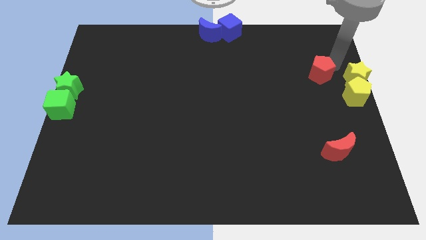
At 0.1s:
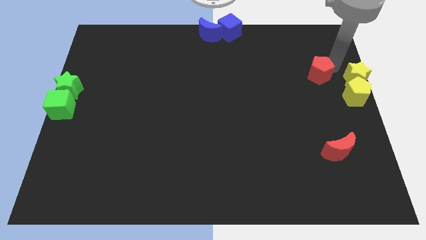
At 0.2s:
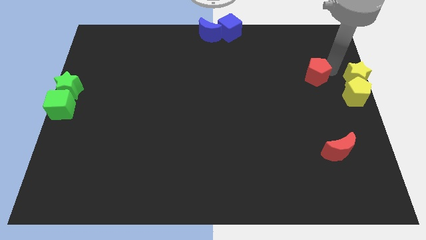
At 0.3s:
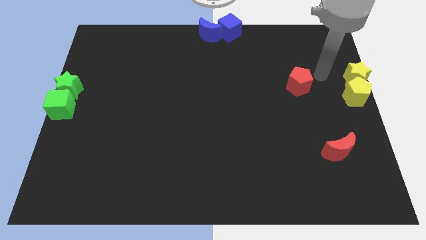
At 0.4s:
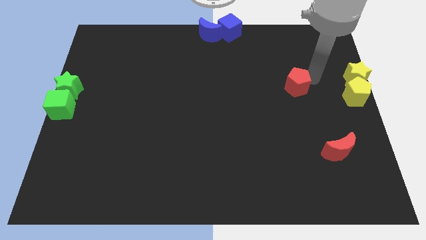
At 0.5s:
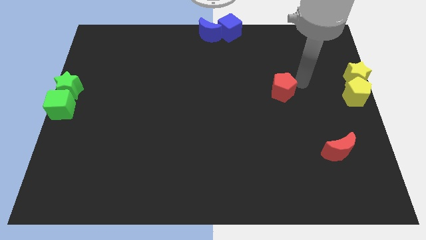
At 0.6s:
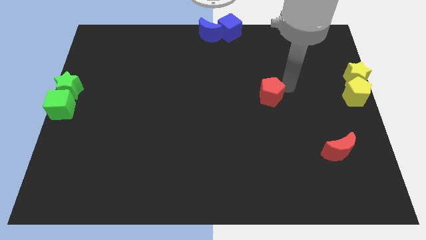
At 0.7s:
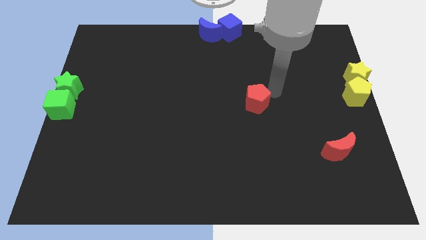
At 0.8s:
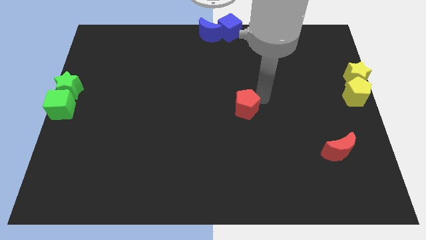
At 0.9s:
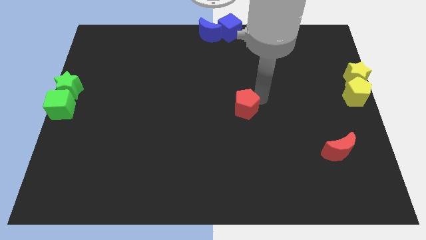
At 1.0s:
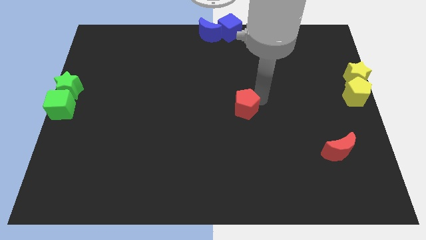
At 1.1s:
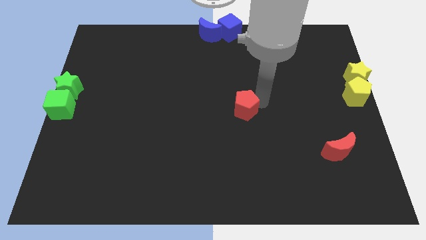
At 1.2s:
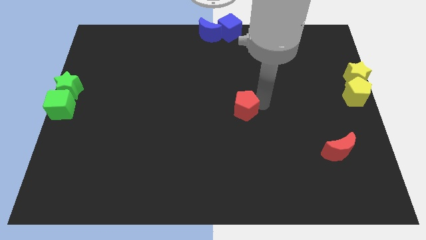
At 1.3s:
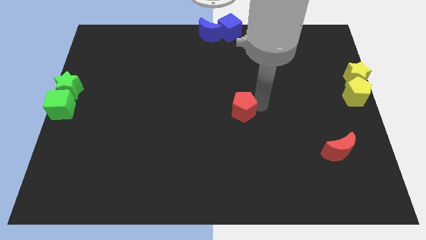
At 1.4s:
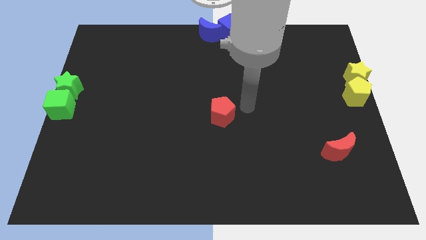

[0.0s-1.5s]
move the red pentagon to the middle of the board

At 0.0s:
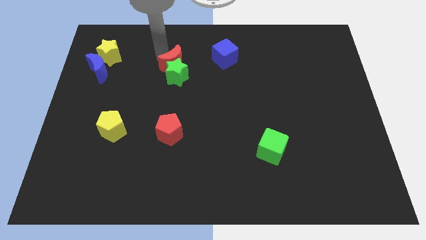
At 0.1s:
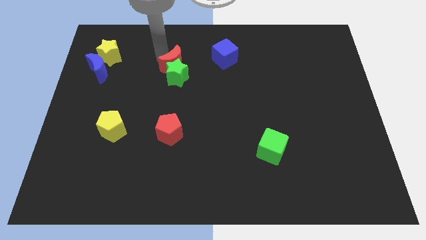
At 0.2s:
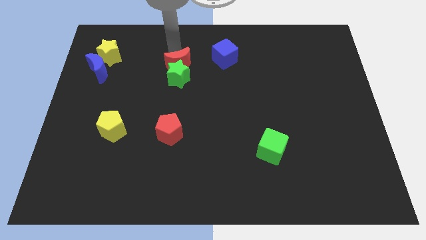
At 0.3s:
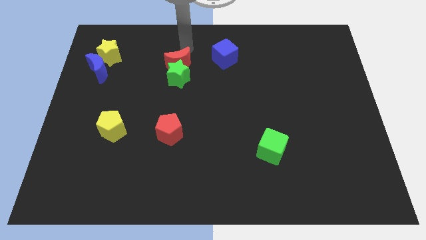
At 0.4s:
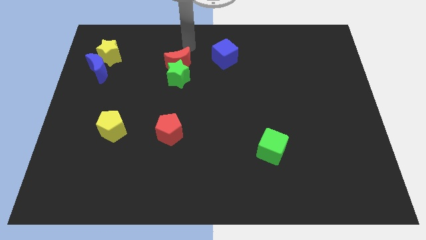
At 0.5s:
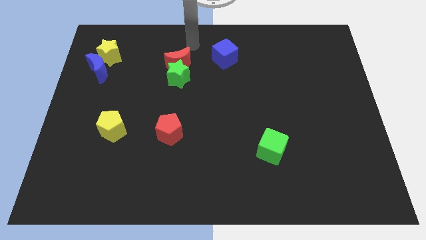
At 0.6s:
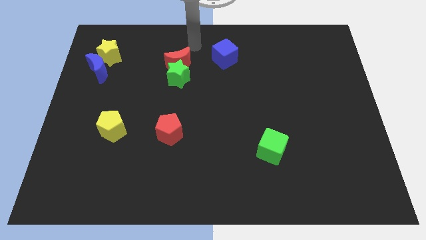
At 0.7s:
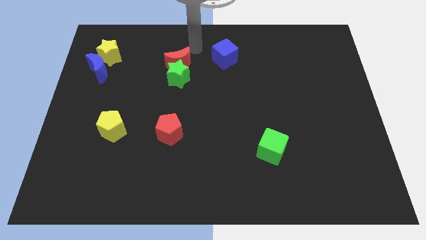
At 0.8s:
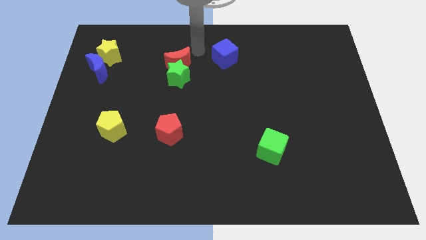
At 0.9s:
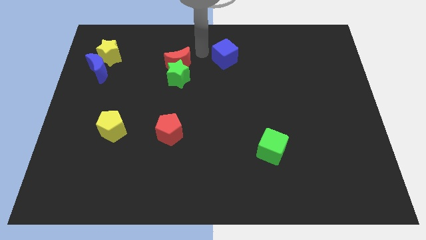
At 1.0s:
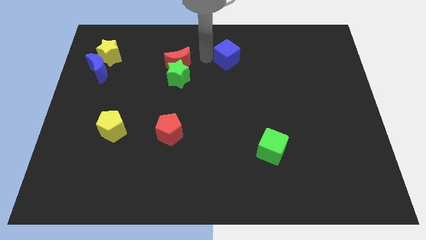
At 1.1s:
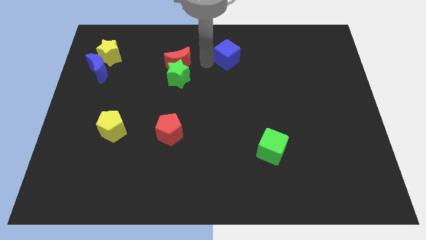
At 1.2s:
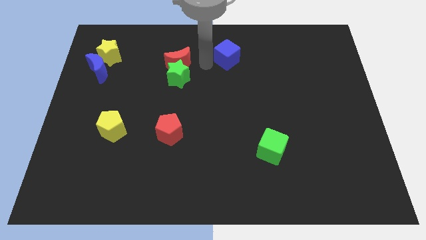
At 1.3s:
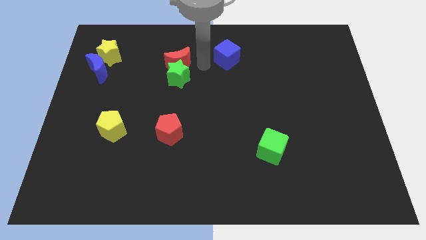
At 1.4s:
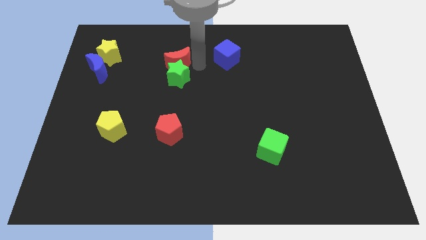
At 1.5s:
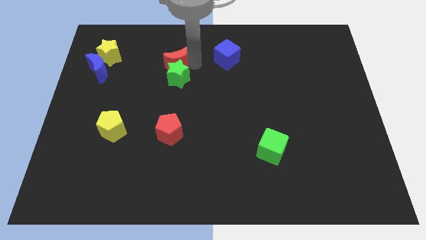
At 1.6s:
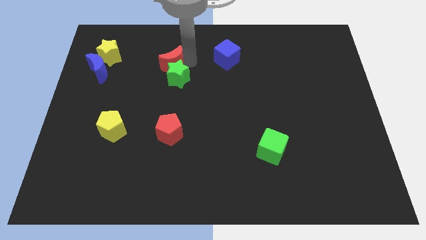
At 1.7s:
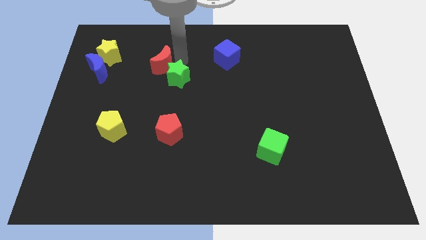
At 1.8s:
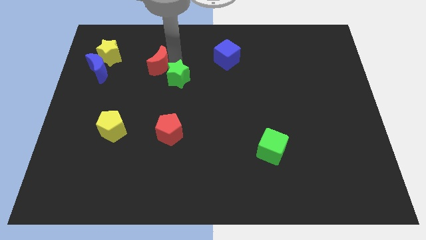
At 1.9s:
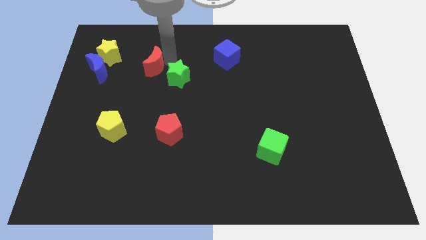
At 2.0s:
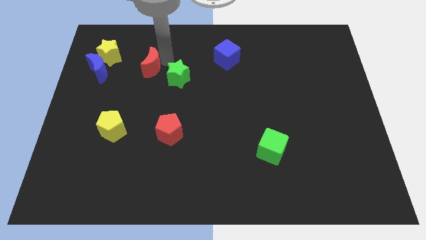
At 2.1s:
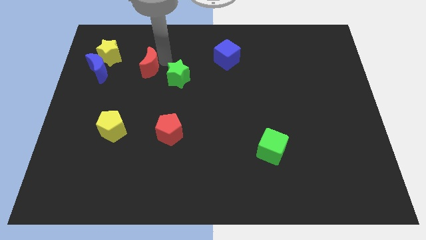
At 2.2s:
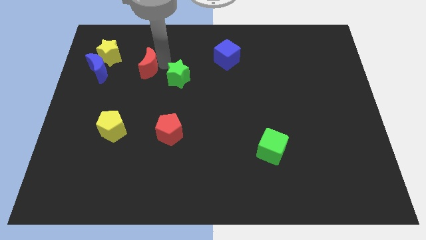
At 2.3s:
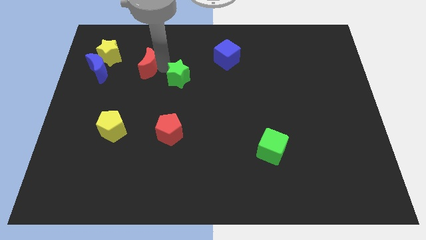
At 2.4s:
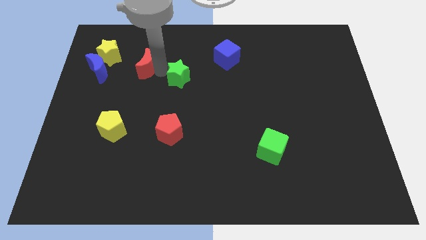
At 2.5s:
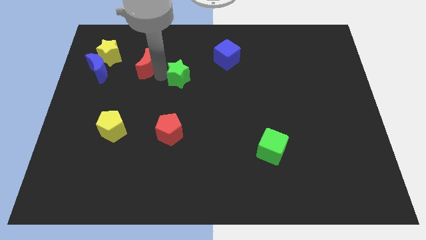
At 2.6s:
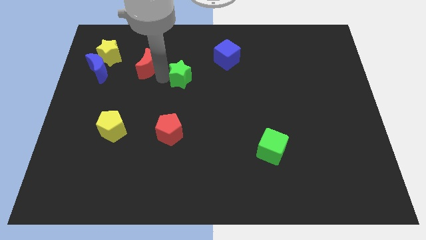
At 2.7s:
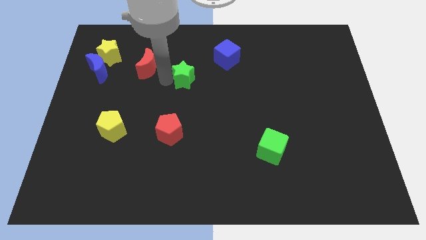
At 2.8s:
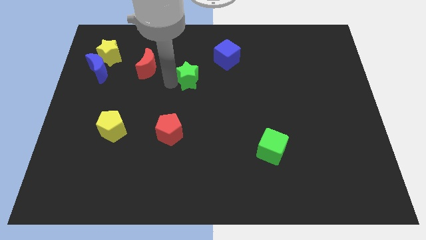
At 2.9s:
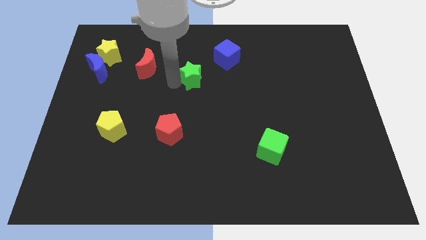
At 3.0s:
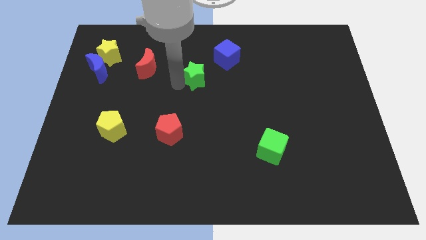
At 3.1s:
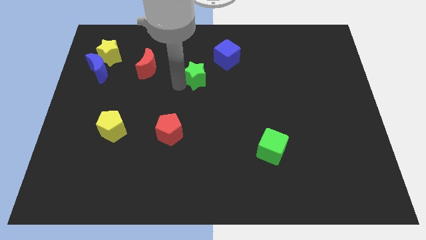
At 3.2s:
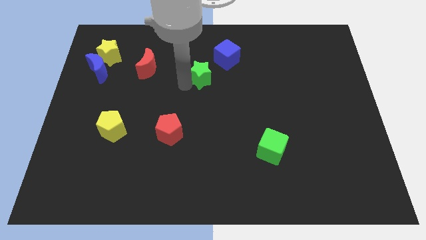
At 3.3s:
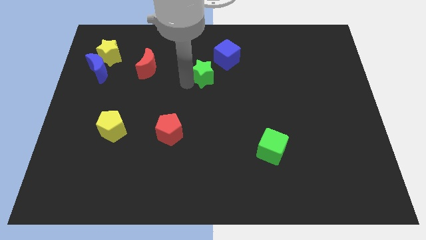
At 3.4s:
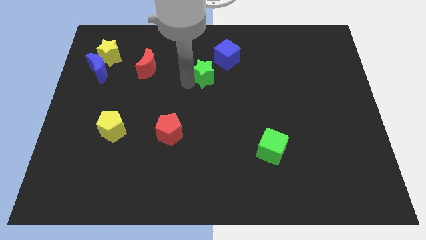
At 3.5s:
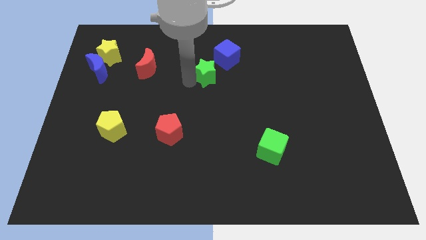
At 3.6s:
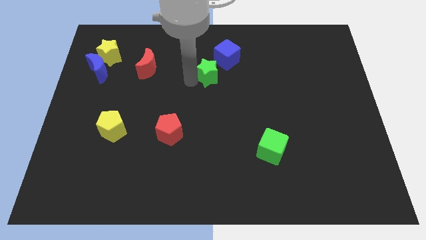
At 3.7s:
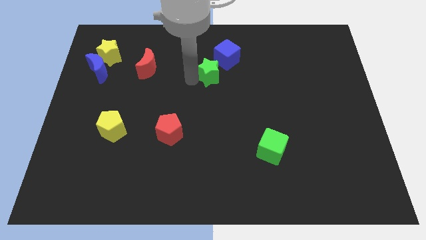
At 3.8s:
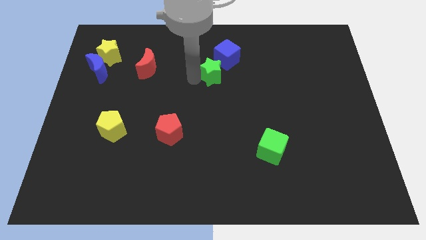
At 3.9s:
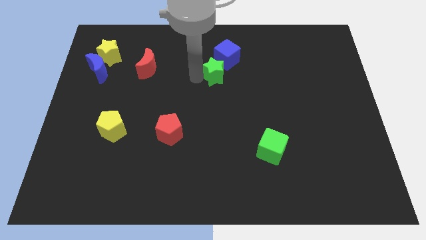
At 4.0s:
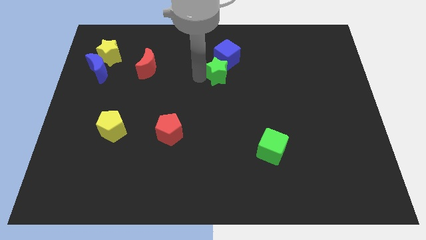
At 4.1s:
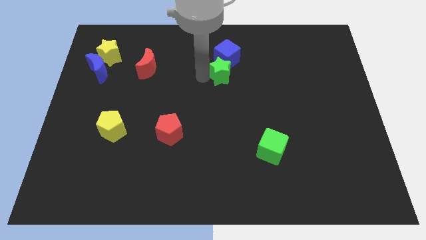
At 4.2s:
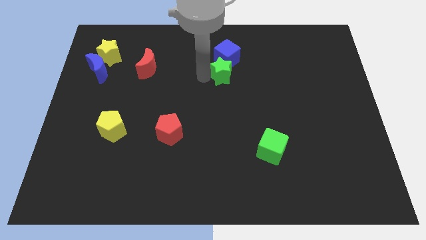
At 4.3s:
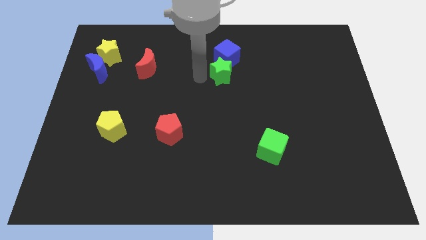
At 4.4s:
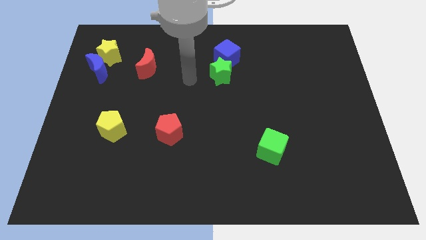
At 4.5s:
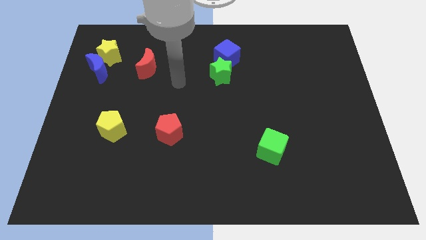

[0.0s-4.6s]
move green star into the blue cube

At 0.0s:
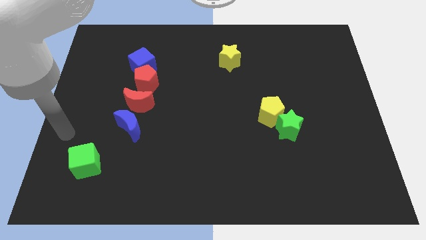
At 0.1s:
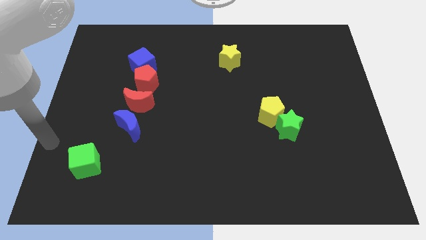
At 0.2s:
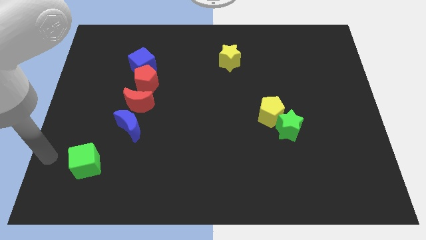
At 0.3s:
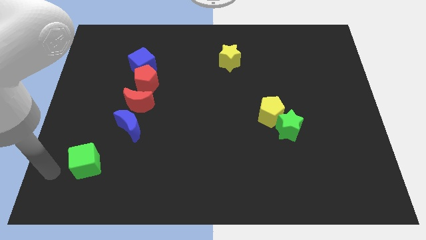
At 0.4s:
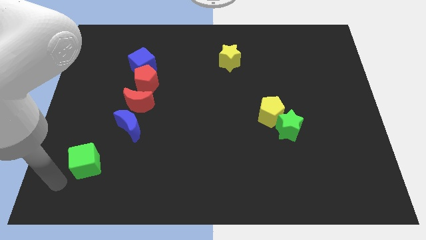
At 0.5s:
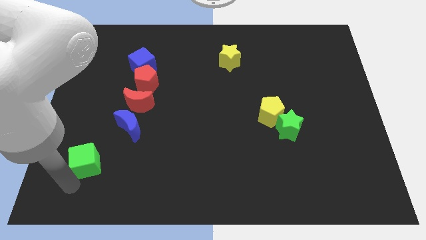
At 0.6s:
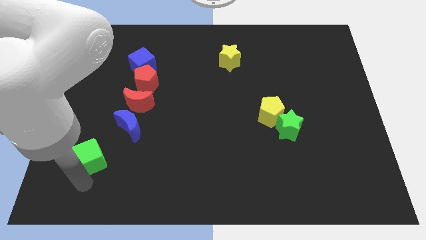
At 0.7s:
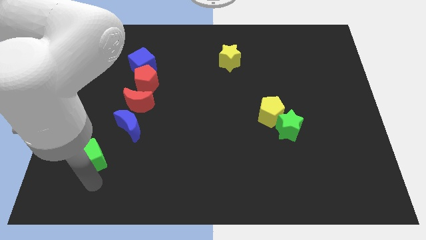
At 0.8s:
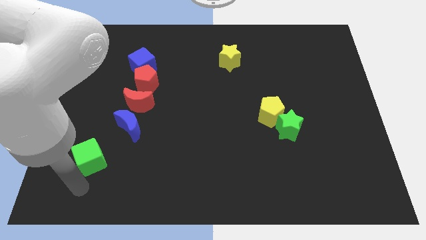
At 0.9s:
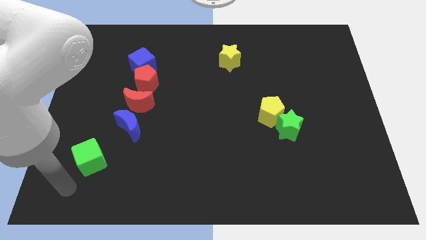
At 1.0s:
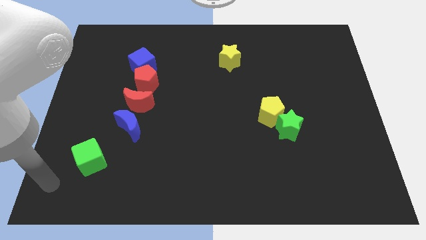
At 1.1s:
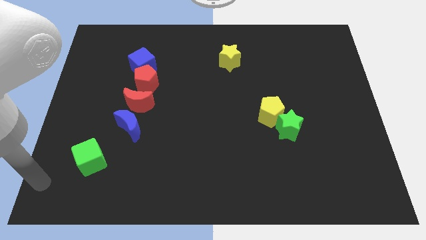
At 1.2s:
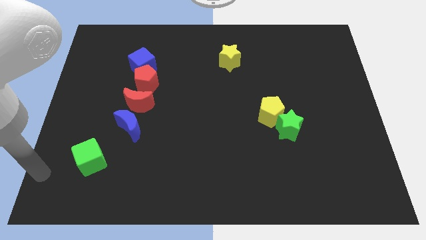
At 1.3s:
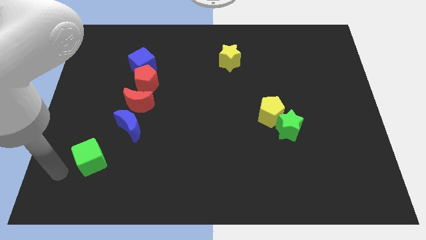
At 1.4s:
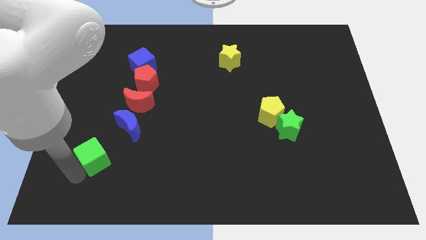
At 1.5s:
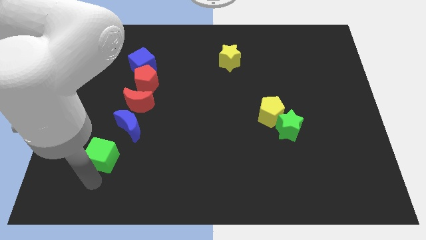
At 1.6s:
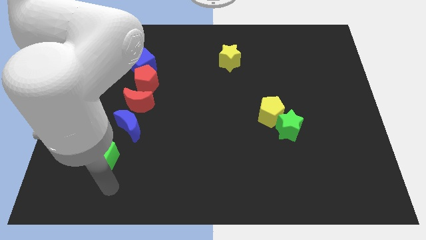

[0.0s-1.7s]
push the green cube towards the blue crescent

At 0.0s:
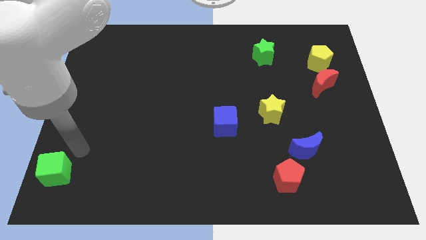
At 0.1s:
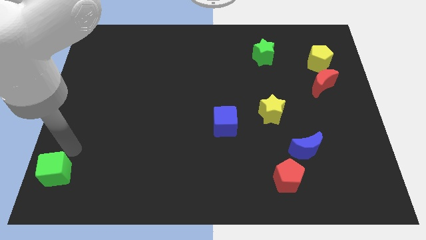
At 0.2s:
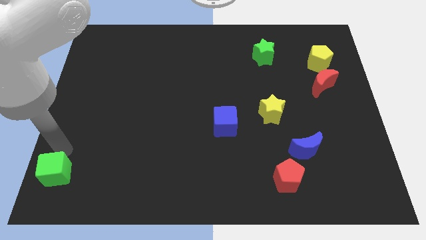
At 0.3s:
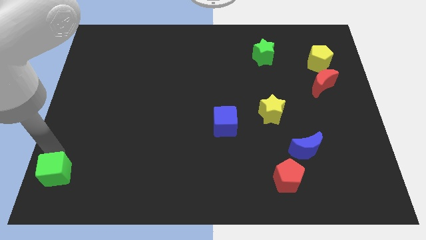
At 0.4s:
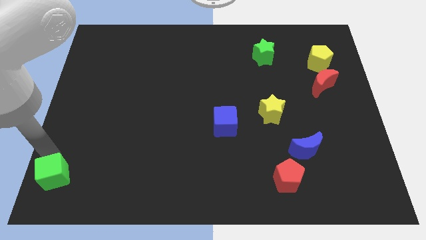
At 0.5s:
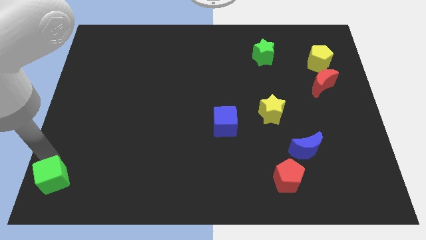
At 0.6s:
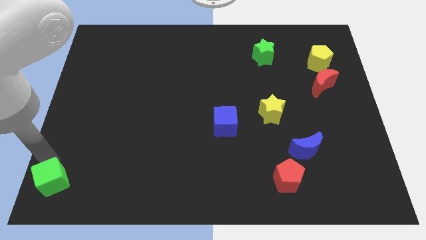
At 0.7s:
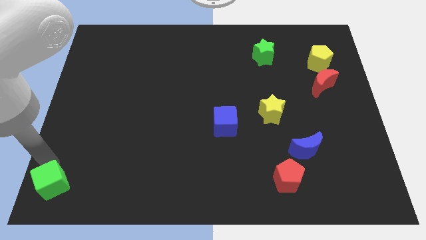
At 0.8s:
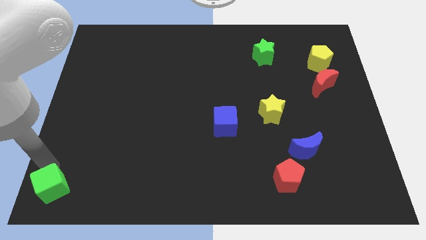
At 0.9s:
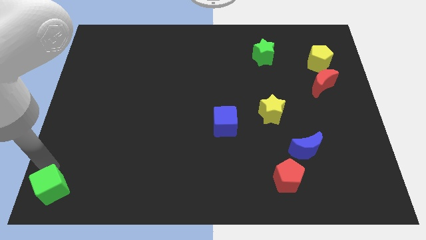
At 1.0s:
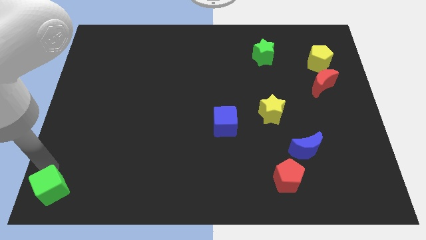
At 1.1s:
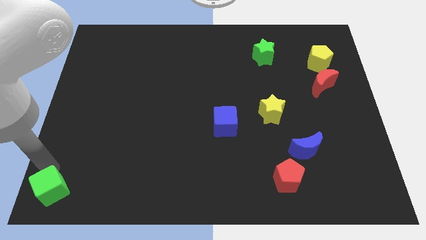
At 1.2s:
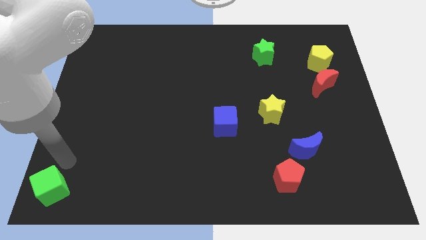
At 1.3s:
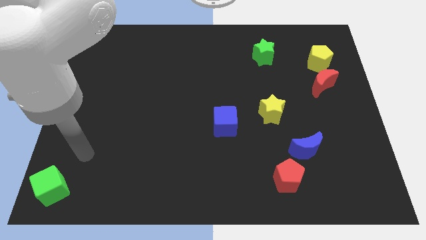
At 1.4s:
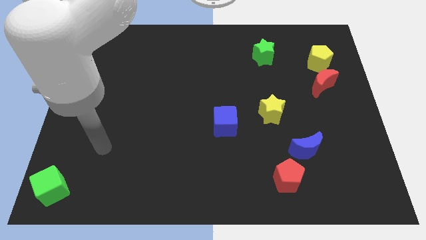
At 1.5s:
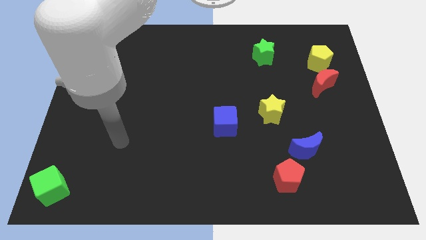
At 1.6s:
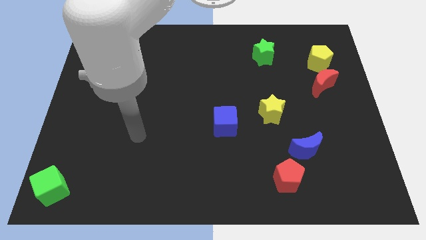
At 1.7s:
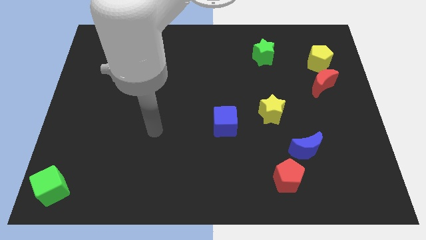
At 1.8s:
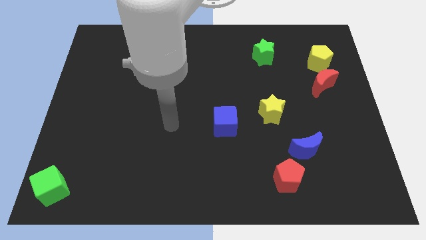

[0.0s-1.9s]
move the green cube to the bottom left
